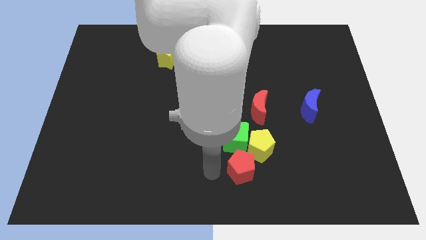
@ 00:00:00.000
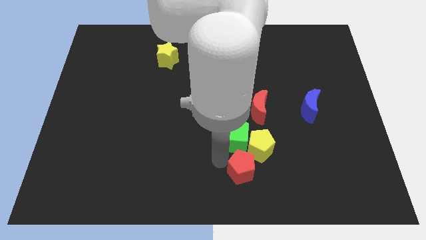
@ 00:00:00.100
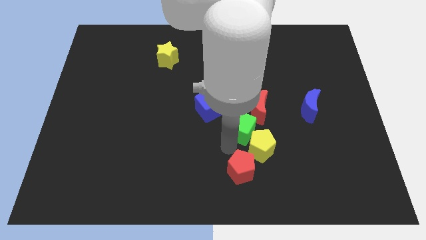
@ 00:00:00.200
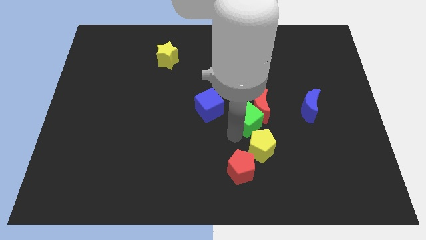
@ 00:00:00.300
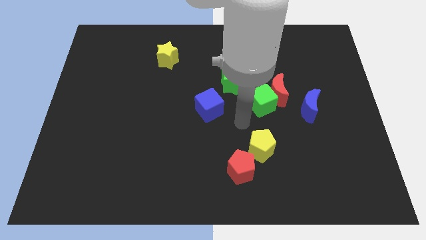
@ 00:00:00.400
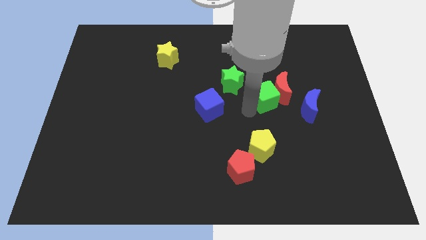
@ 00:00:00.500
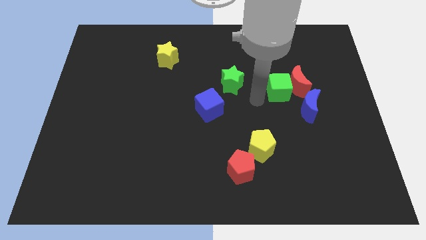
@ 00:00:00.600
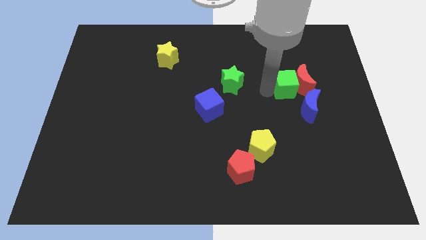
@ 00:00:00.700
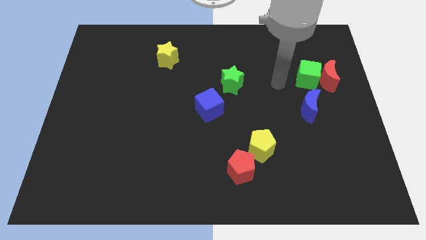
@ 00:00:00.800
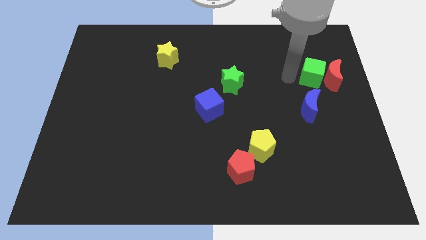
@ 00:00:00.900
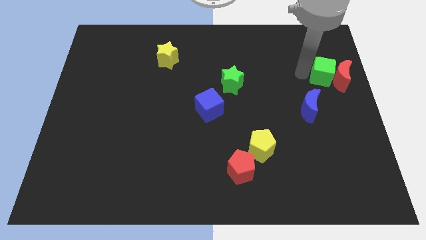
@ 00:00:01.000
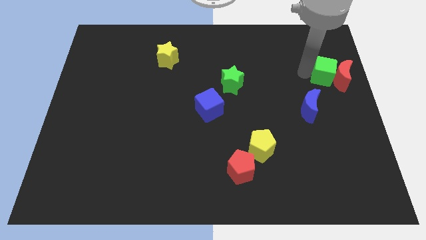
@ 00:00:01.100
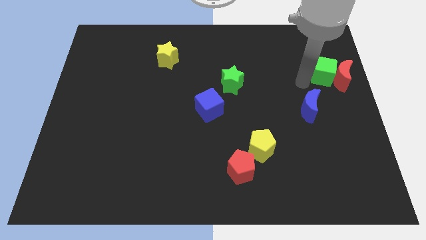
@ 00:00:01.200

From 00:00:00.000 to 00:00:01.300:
slide the green cube into the red moon

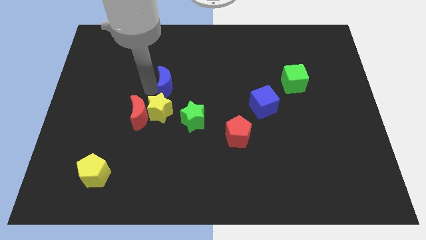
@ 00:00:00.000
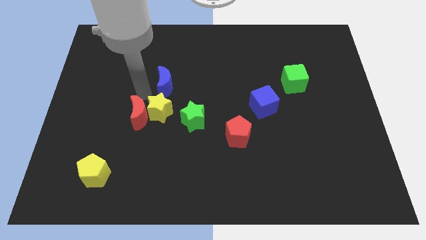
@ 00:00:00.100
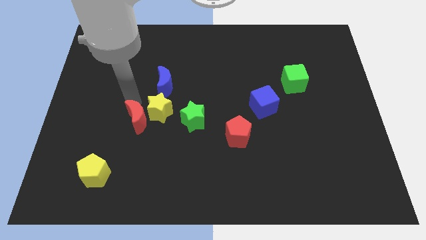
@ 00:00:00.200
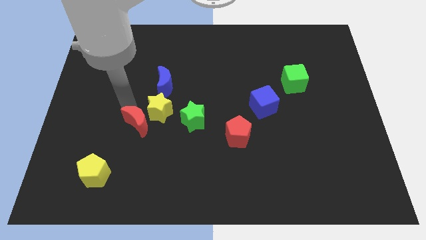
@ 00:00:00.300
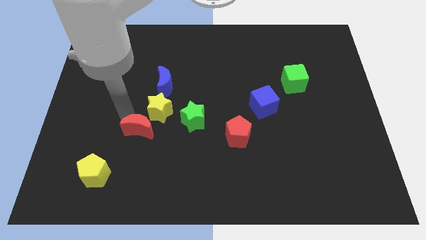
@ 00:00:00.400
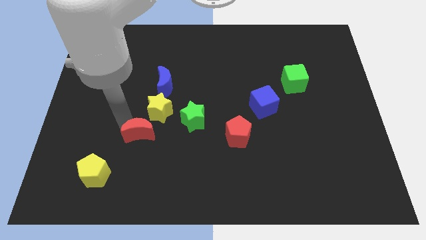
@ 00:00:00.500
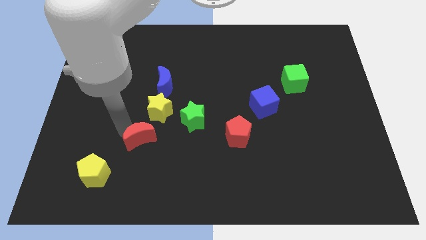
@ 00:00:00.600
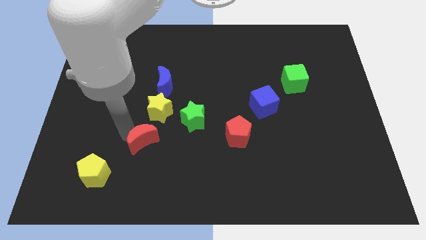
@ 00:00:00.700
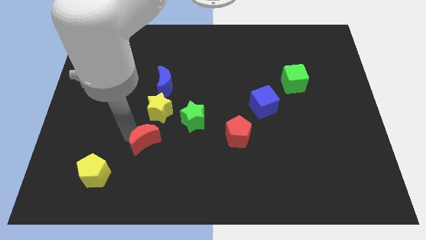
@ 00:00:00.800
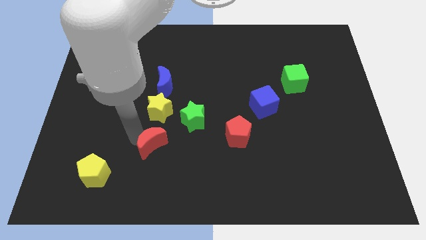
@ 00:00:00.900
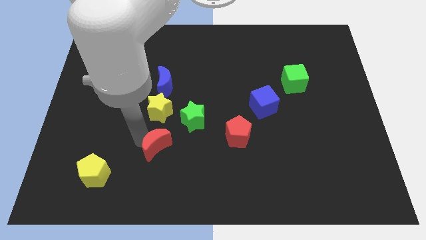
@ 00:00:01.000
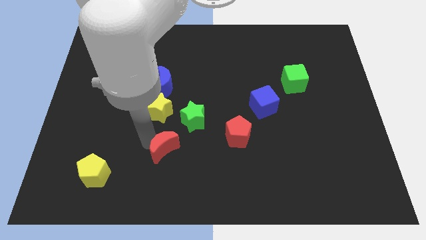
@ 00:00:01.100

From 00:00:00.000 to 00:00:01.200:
push the red crescent below the yellow star

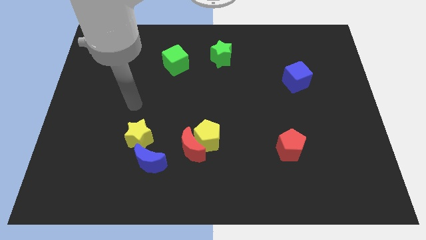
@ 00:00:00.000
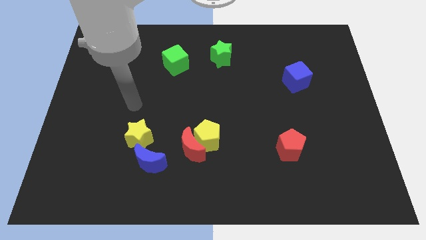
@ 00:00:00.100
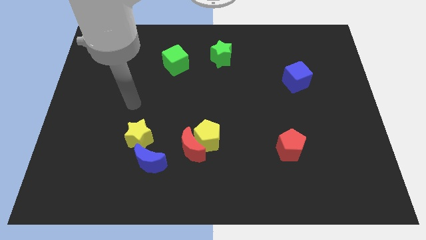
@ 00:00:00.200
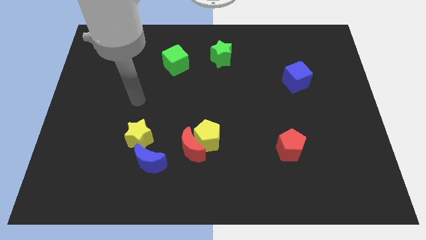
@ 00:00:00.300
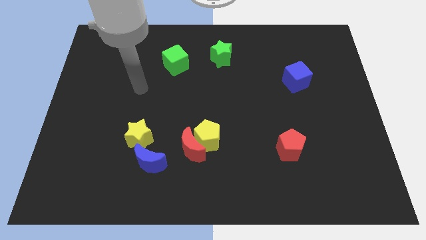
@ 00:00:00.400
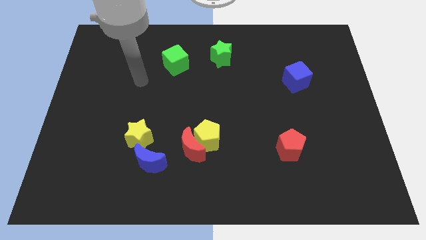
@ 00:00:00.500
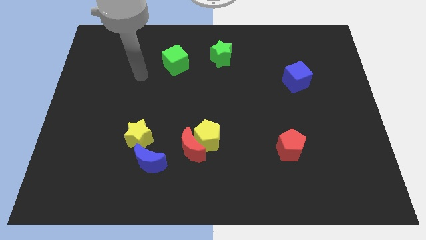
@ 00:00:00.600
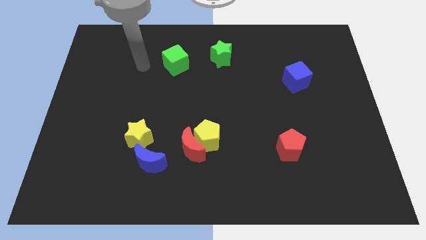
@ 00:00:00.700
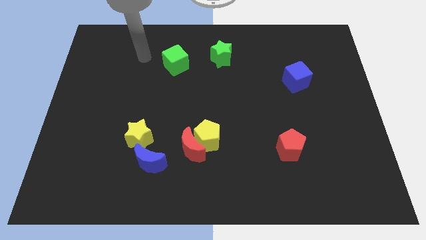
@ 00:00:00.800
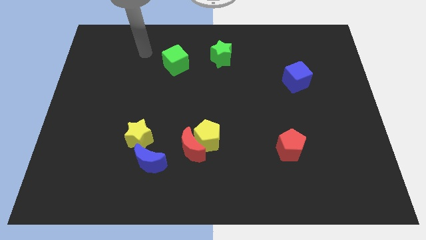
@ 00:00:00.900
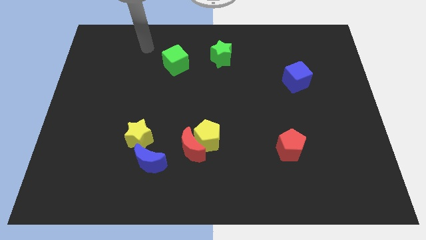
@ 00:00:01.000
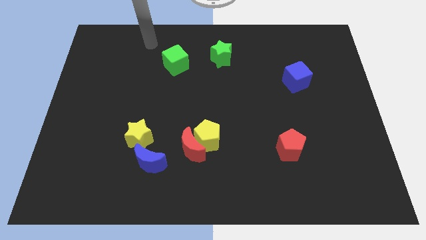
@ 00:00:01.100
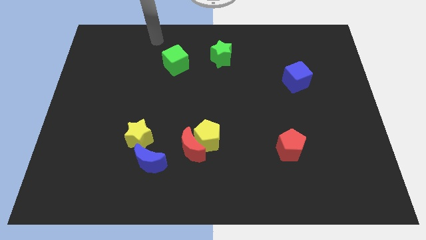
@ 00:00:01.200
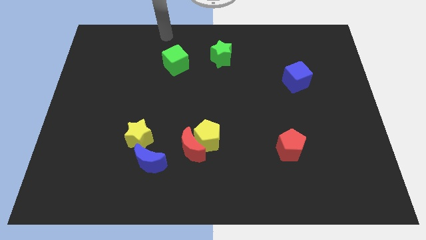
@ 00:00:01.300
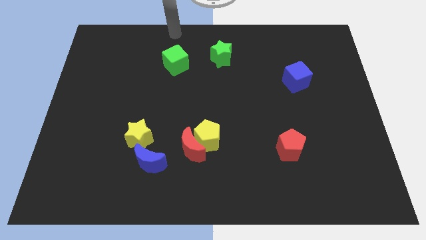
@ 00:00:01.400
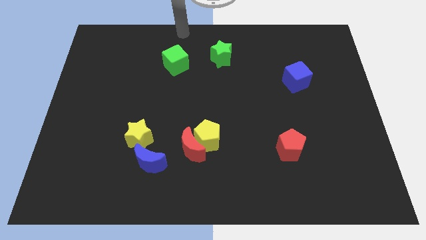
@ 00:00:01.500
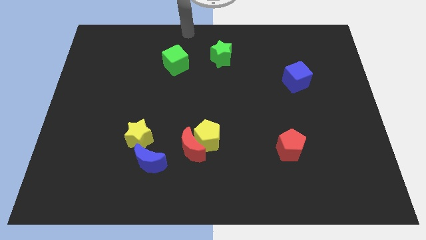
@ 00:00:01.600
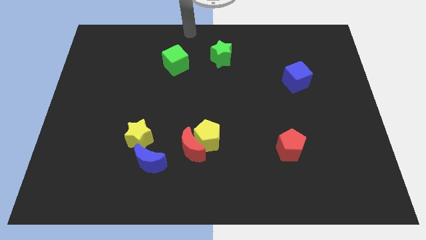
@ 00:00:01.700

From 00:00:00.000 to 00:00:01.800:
move your arm to the top center of the board

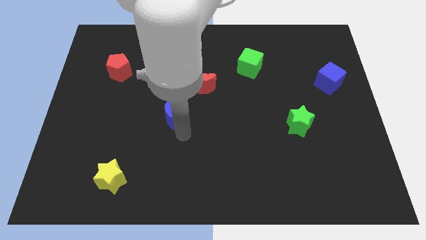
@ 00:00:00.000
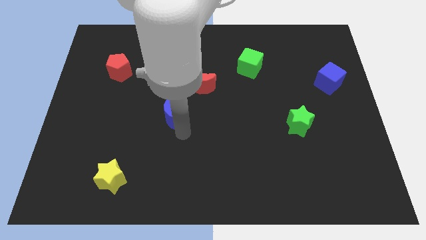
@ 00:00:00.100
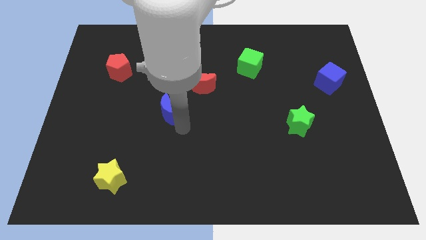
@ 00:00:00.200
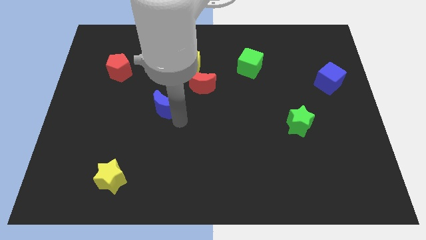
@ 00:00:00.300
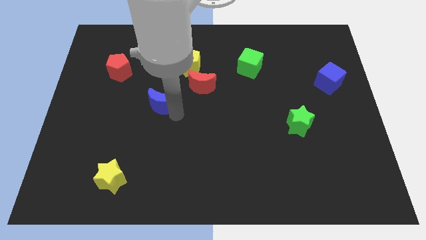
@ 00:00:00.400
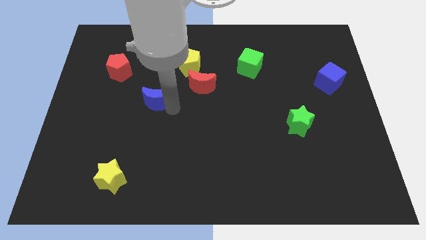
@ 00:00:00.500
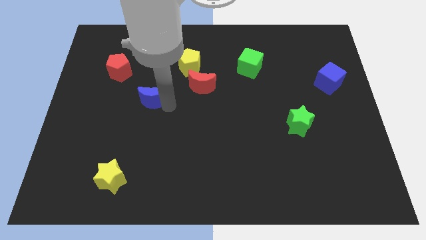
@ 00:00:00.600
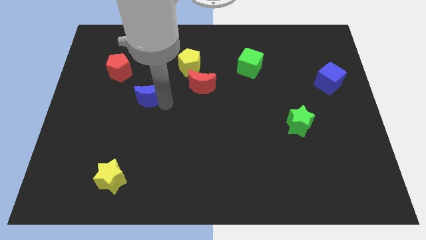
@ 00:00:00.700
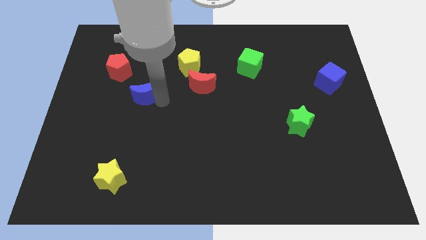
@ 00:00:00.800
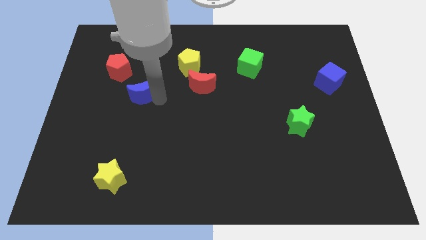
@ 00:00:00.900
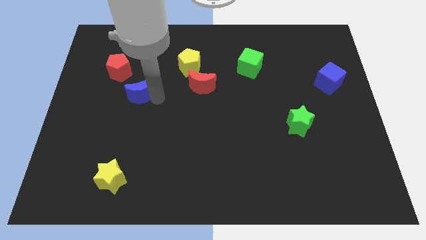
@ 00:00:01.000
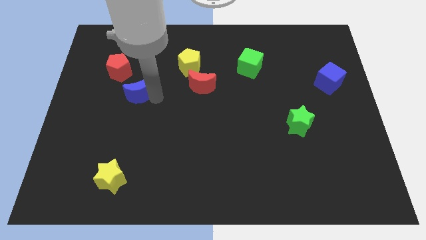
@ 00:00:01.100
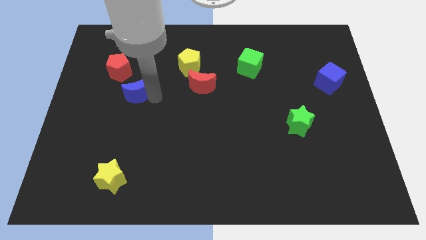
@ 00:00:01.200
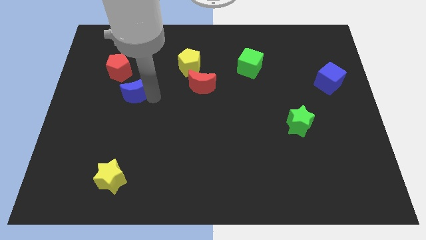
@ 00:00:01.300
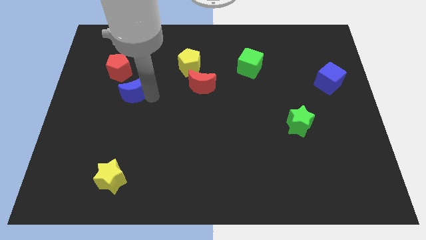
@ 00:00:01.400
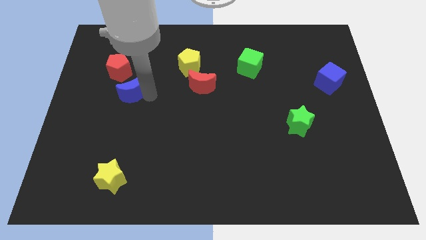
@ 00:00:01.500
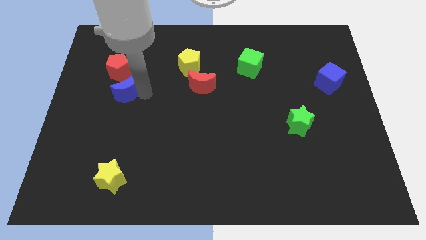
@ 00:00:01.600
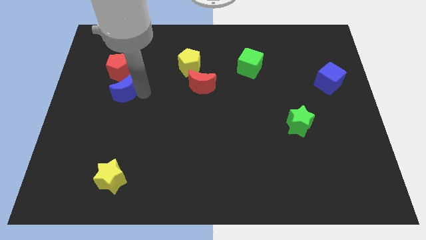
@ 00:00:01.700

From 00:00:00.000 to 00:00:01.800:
place the blue moon below the red pentagon

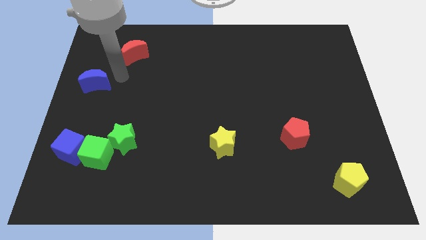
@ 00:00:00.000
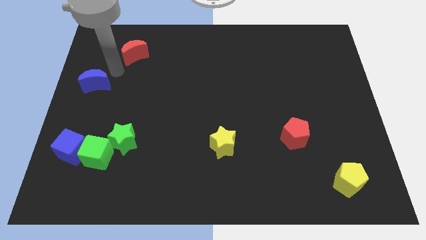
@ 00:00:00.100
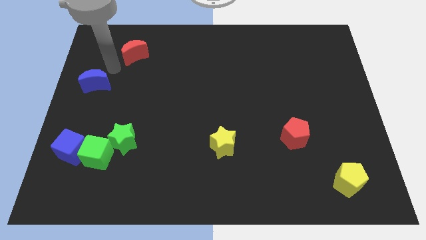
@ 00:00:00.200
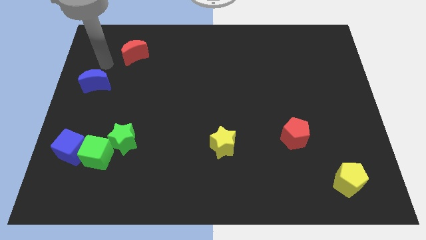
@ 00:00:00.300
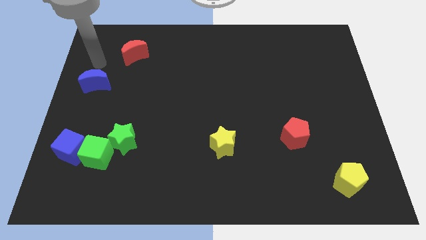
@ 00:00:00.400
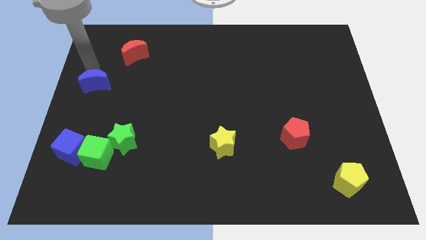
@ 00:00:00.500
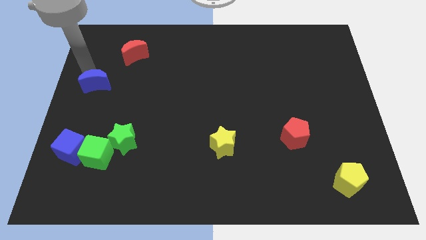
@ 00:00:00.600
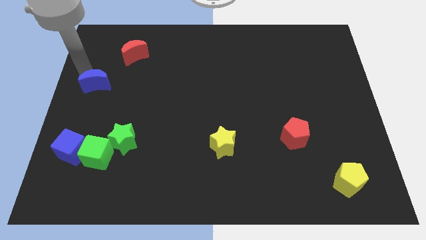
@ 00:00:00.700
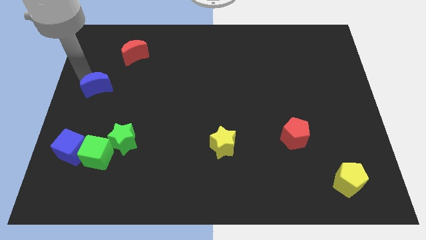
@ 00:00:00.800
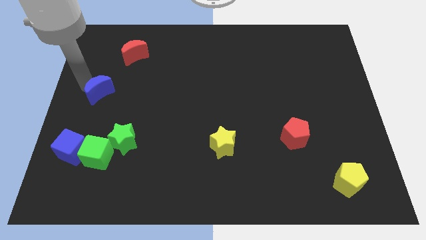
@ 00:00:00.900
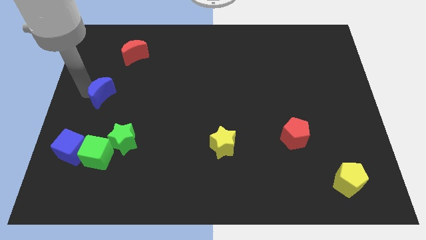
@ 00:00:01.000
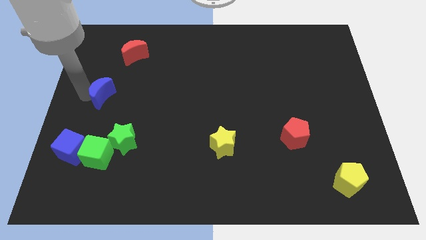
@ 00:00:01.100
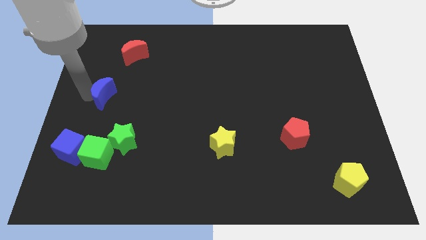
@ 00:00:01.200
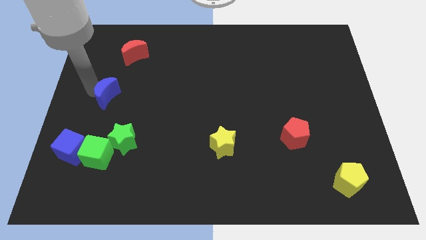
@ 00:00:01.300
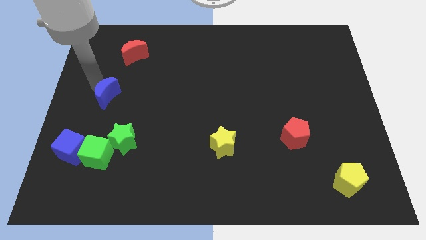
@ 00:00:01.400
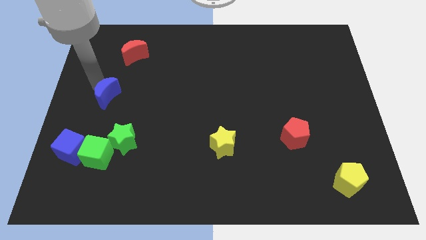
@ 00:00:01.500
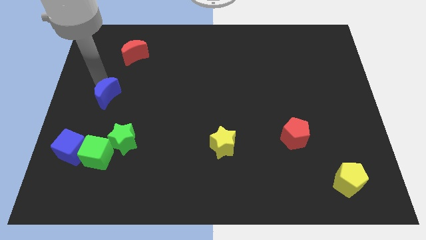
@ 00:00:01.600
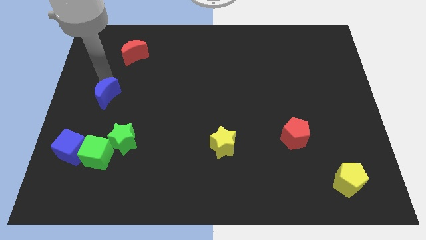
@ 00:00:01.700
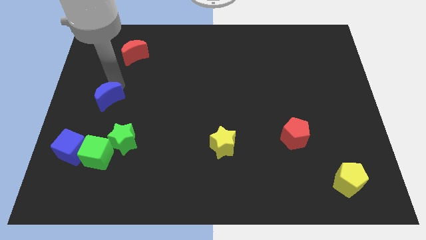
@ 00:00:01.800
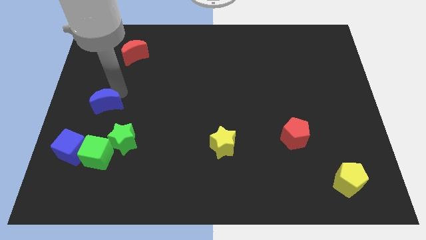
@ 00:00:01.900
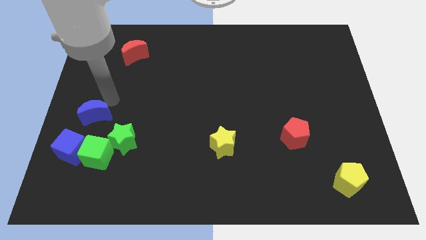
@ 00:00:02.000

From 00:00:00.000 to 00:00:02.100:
move the blue crescent above blue cube

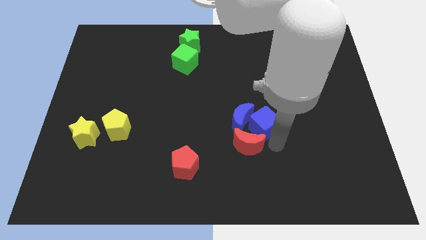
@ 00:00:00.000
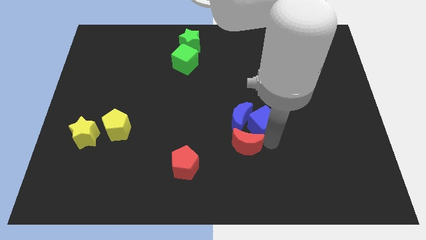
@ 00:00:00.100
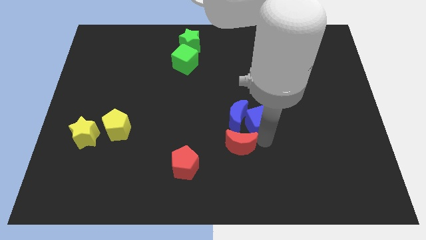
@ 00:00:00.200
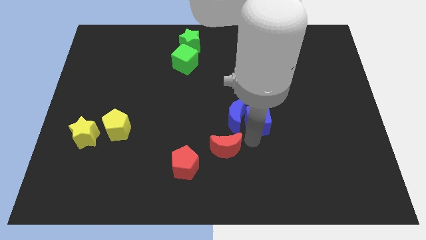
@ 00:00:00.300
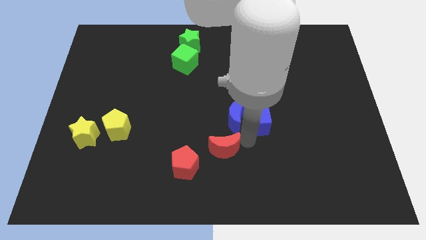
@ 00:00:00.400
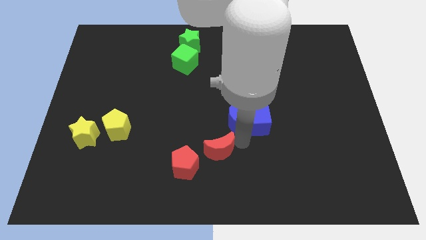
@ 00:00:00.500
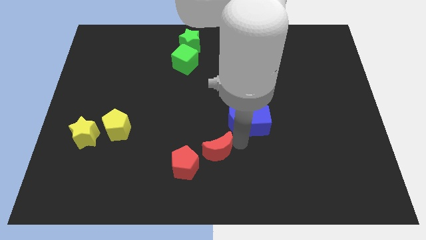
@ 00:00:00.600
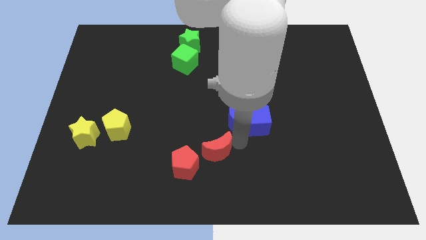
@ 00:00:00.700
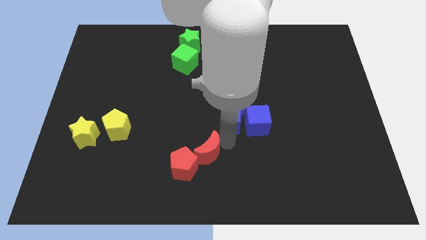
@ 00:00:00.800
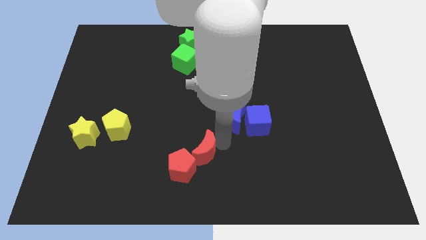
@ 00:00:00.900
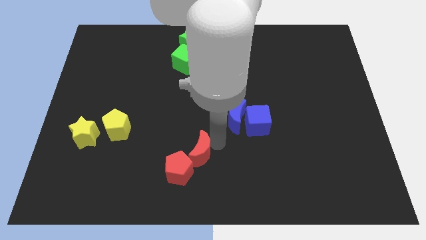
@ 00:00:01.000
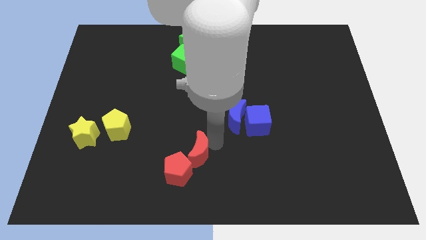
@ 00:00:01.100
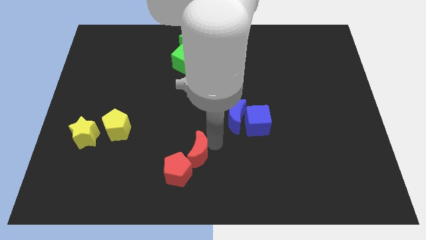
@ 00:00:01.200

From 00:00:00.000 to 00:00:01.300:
push the red crescent to the top right of the red pentagon
